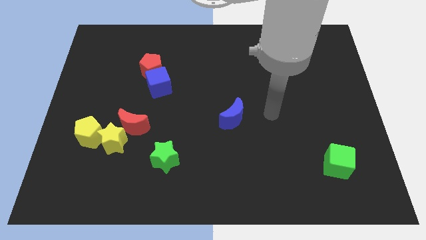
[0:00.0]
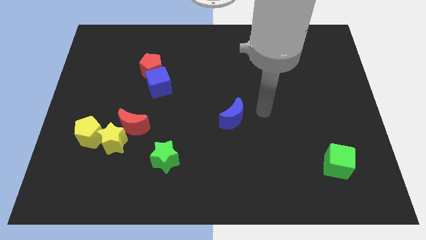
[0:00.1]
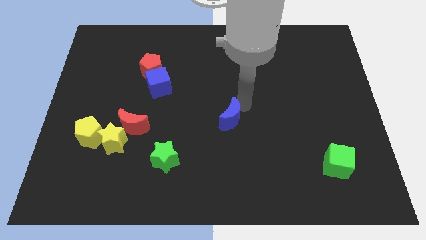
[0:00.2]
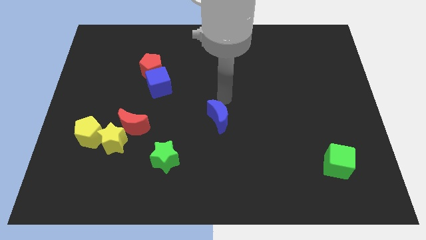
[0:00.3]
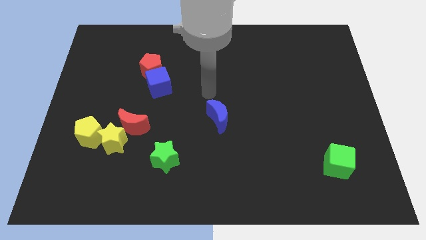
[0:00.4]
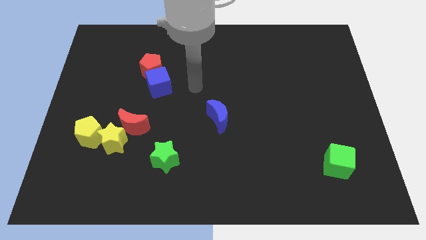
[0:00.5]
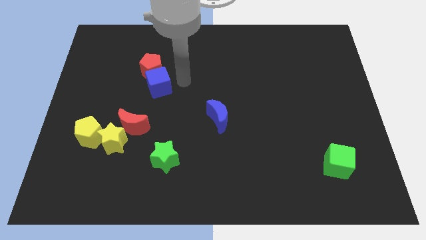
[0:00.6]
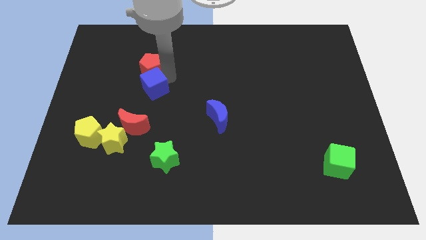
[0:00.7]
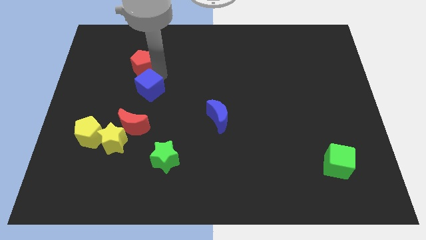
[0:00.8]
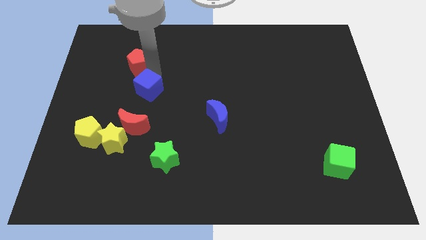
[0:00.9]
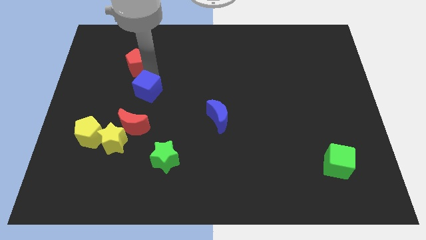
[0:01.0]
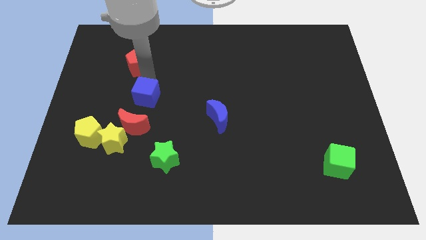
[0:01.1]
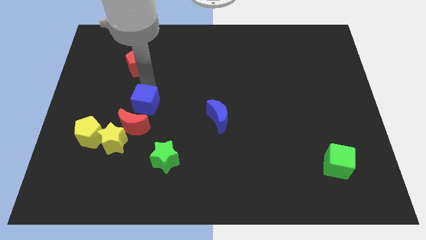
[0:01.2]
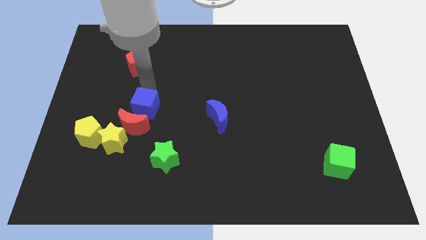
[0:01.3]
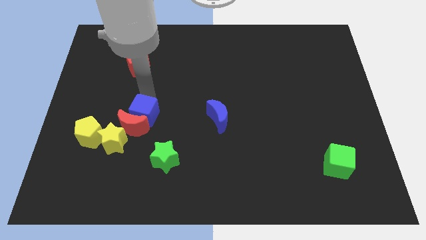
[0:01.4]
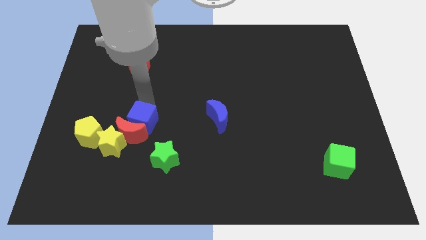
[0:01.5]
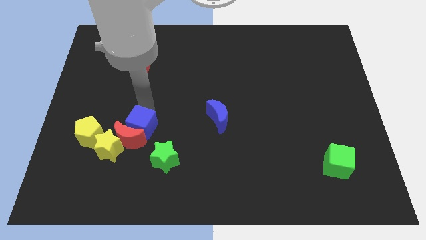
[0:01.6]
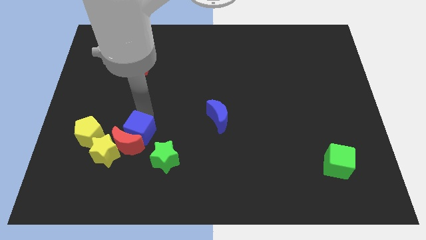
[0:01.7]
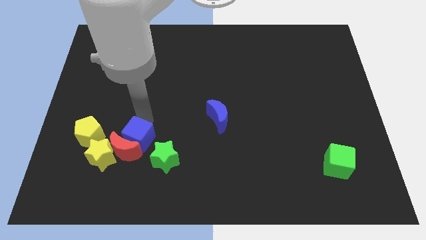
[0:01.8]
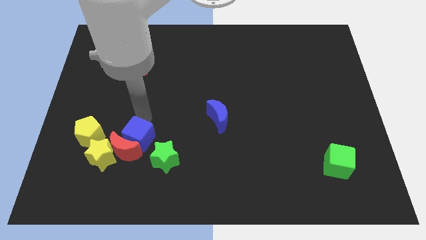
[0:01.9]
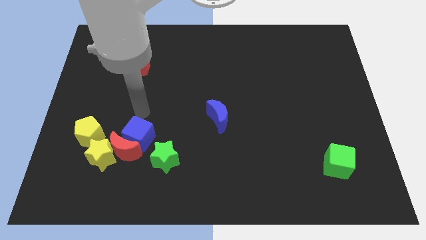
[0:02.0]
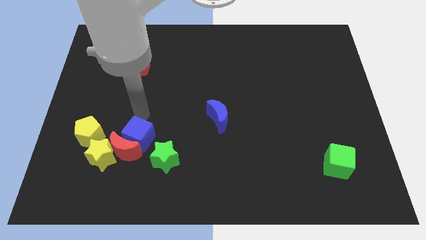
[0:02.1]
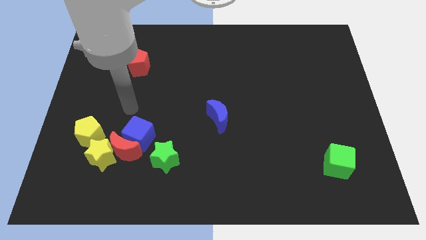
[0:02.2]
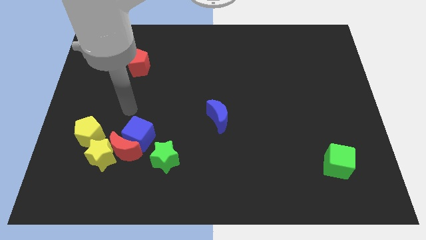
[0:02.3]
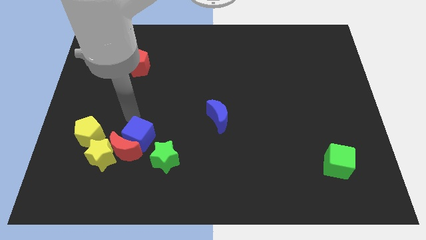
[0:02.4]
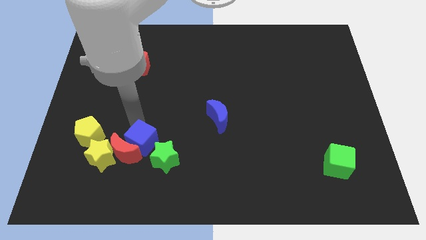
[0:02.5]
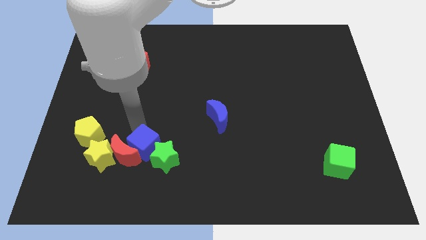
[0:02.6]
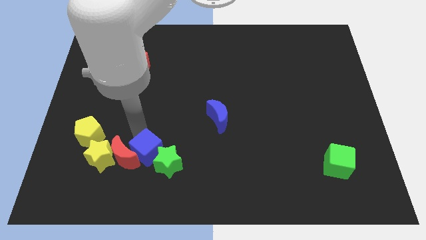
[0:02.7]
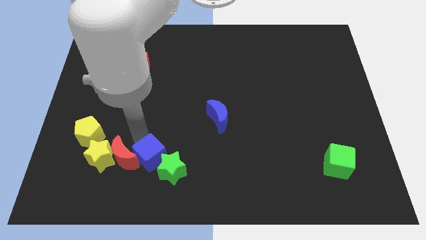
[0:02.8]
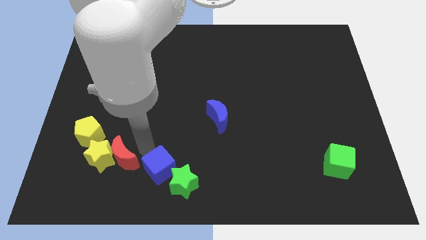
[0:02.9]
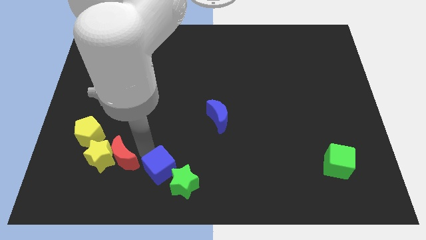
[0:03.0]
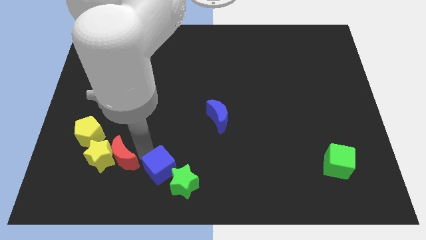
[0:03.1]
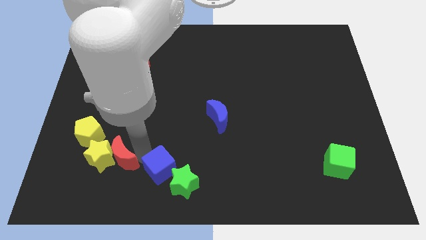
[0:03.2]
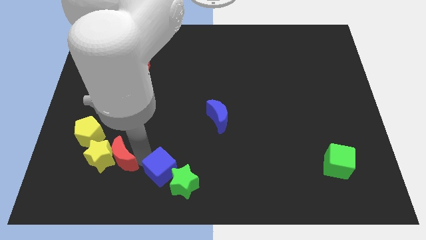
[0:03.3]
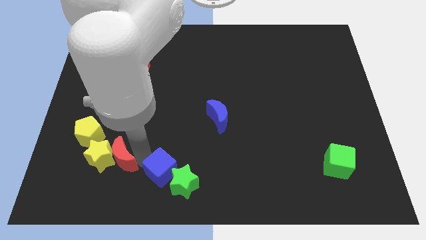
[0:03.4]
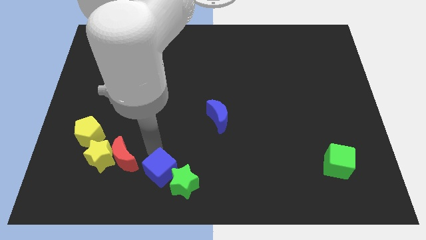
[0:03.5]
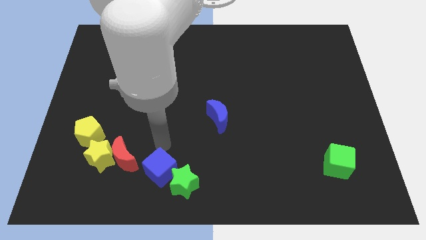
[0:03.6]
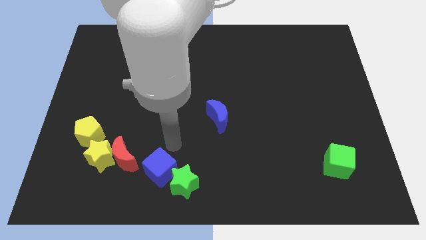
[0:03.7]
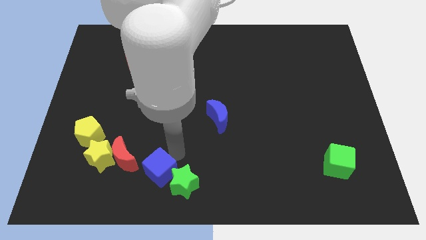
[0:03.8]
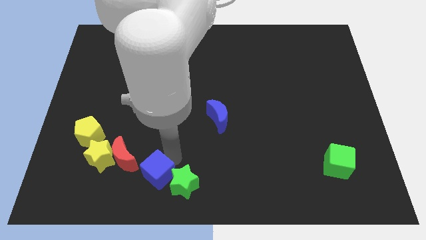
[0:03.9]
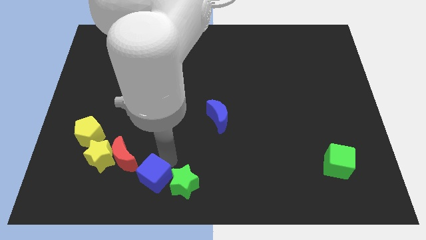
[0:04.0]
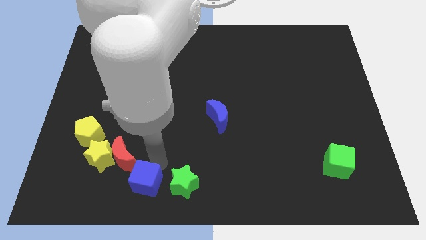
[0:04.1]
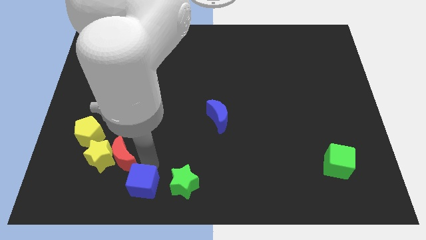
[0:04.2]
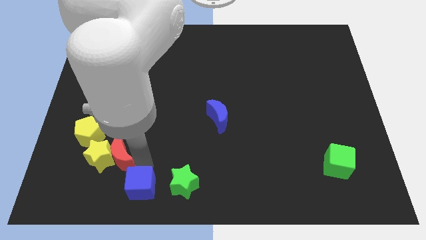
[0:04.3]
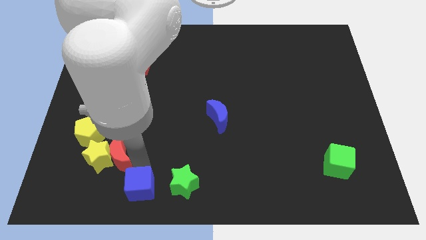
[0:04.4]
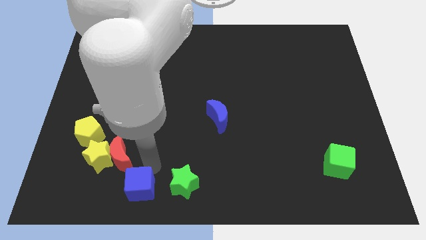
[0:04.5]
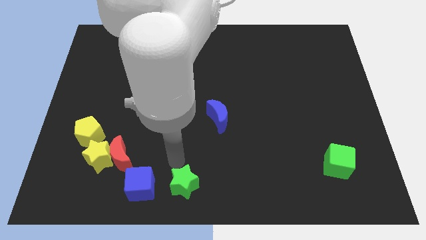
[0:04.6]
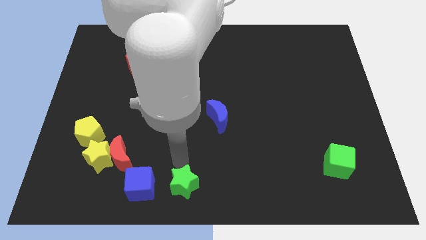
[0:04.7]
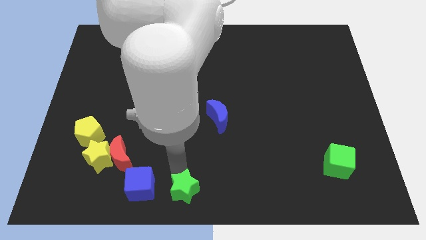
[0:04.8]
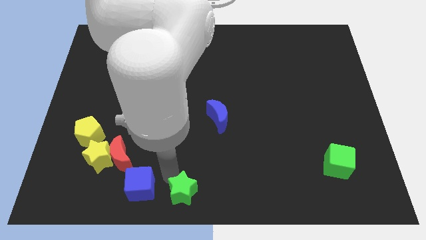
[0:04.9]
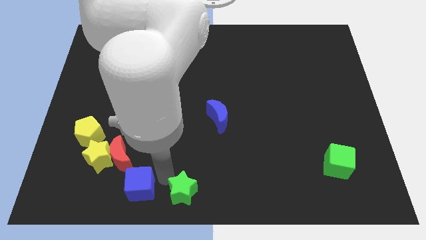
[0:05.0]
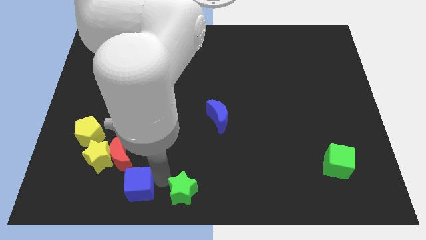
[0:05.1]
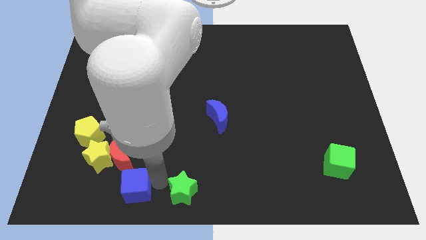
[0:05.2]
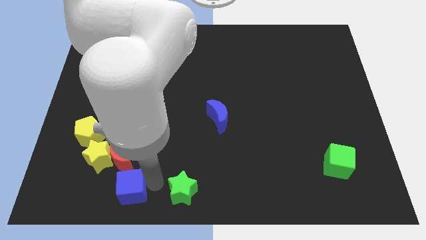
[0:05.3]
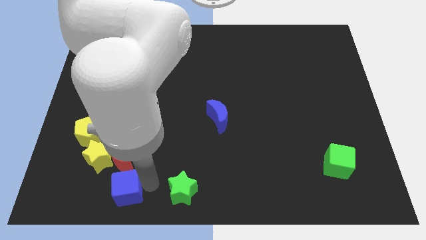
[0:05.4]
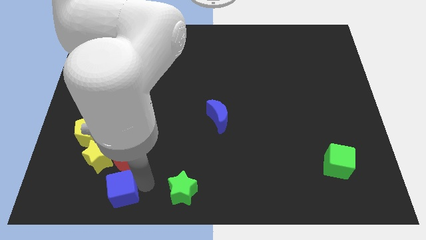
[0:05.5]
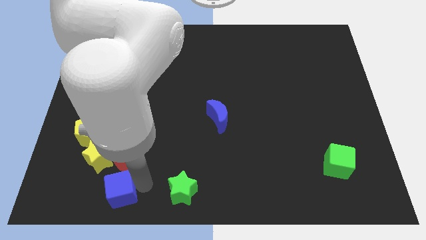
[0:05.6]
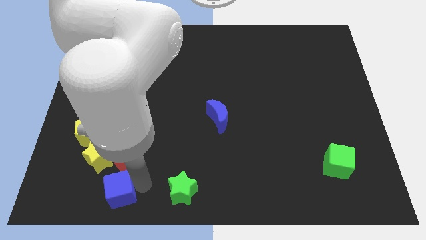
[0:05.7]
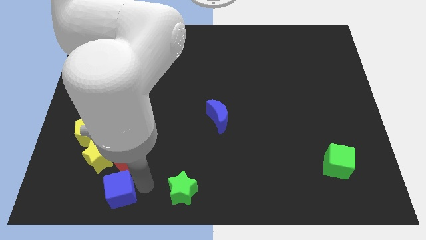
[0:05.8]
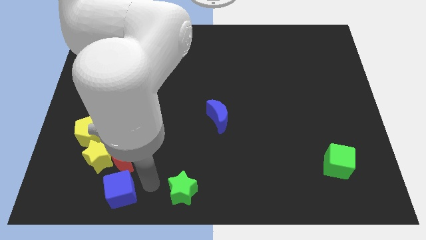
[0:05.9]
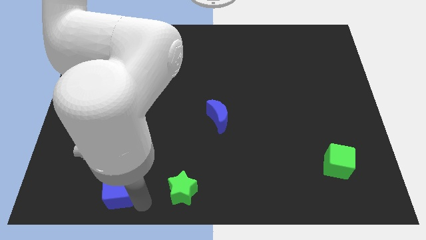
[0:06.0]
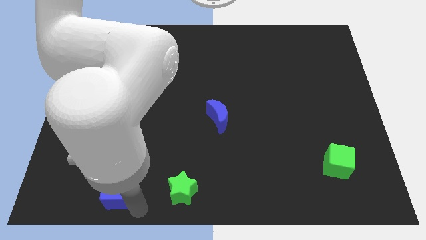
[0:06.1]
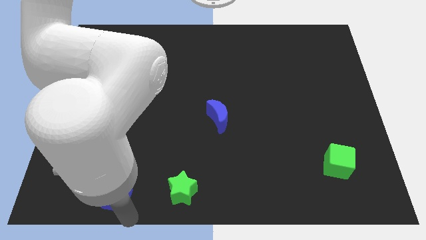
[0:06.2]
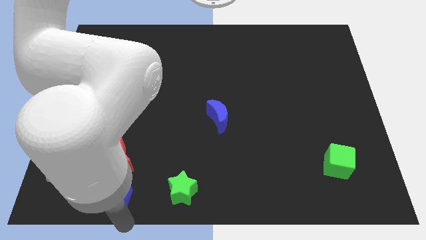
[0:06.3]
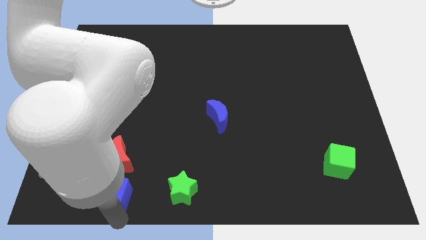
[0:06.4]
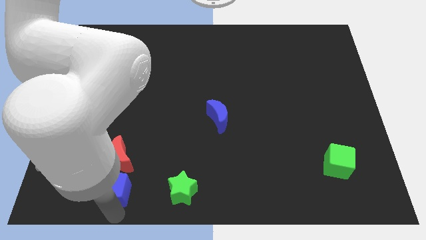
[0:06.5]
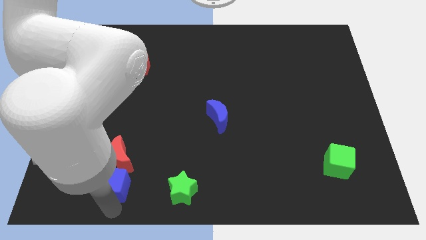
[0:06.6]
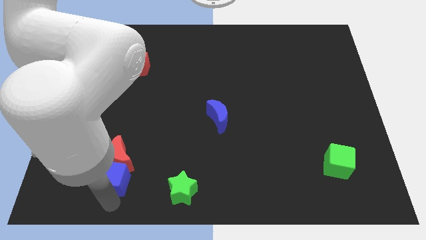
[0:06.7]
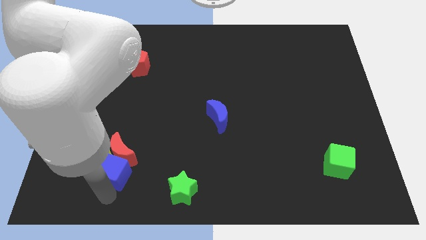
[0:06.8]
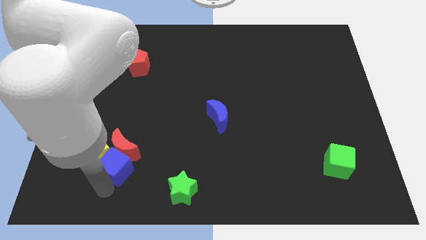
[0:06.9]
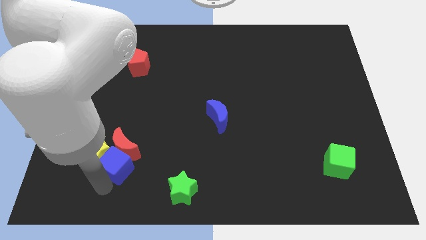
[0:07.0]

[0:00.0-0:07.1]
put the blue cube next to the yellow star

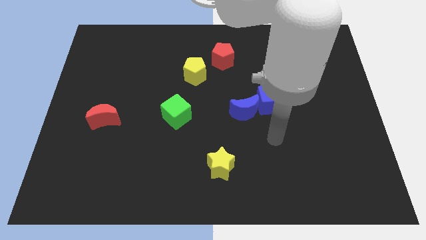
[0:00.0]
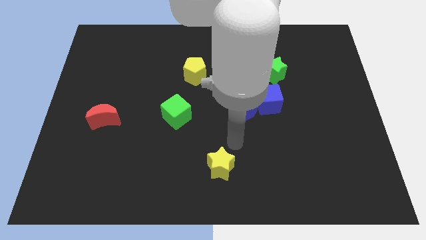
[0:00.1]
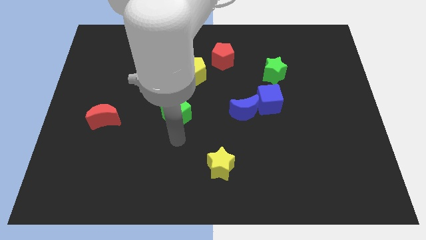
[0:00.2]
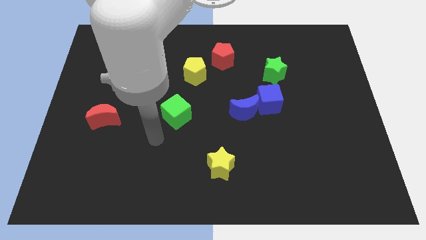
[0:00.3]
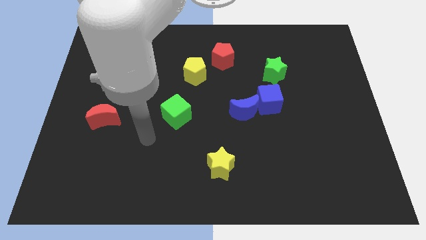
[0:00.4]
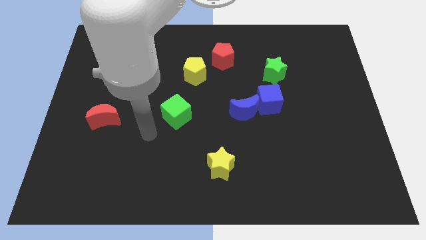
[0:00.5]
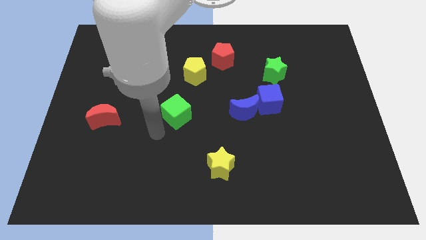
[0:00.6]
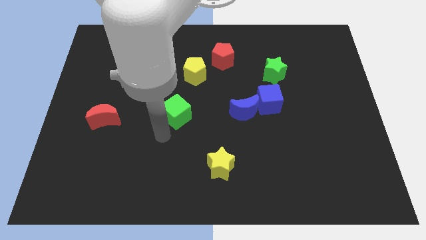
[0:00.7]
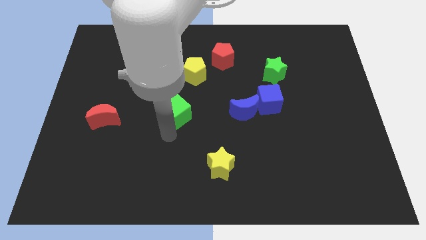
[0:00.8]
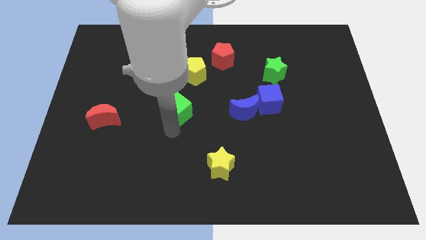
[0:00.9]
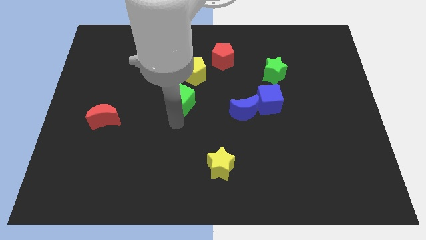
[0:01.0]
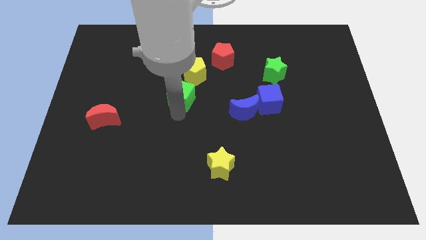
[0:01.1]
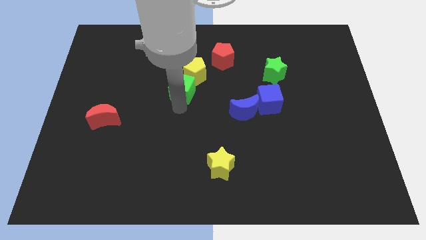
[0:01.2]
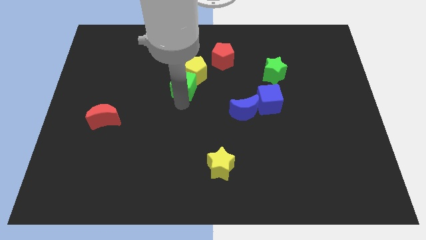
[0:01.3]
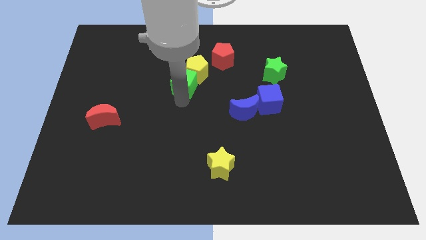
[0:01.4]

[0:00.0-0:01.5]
push the green cube next to the yellow pentagon
